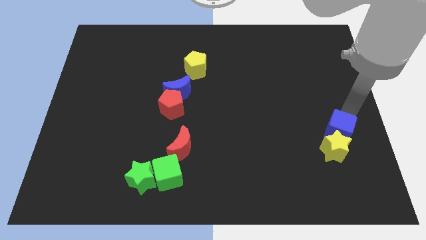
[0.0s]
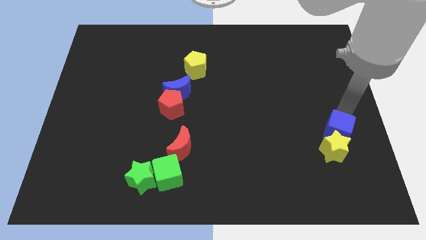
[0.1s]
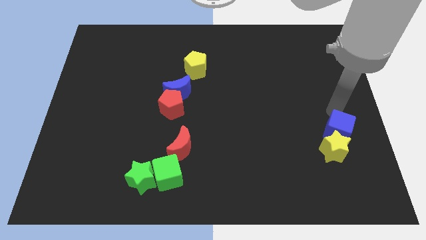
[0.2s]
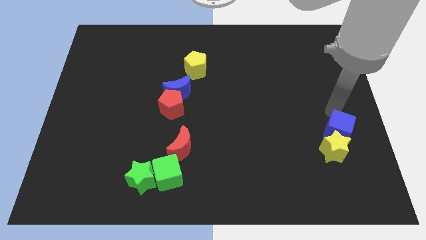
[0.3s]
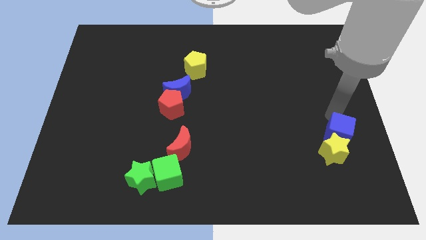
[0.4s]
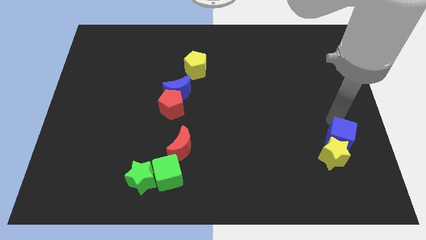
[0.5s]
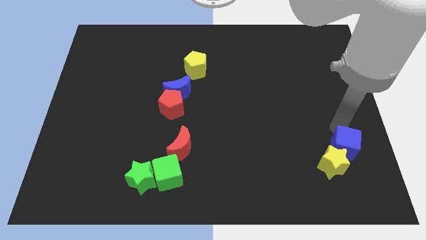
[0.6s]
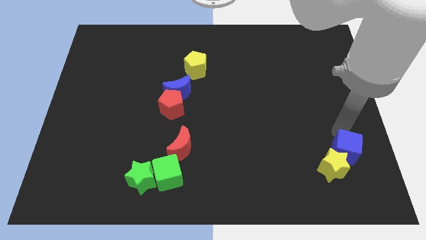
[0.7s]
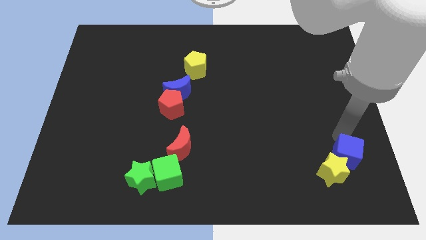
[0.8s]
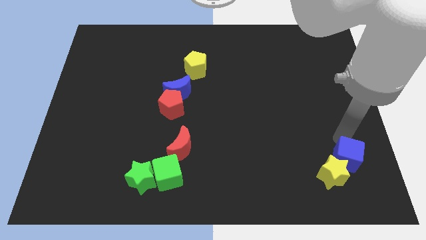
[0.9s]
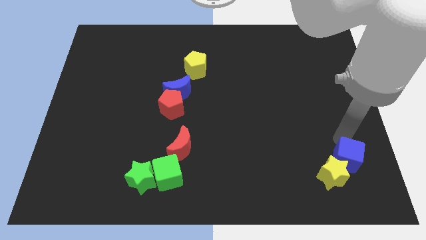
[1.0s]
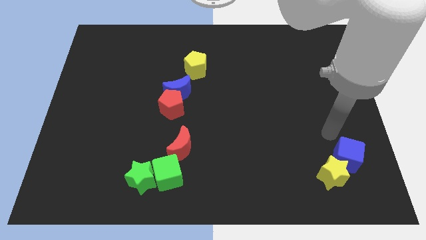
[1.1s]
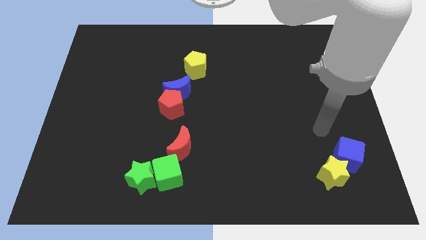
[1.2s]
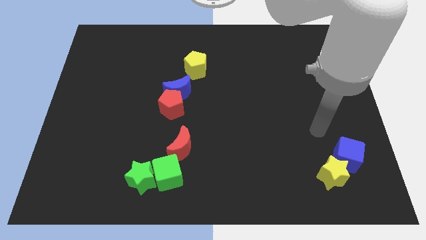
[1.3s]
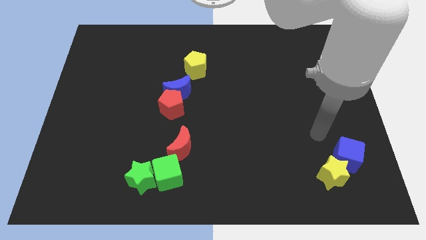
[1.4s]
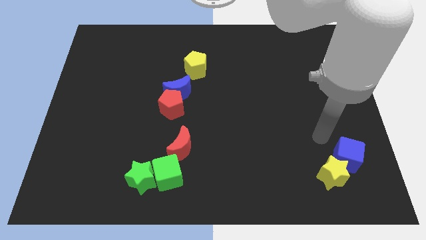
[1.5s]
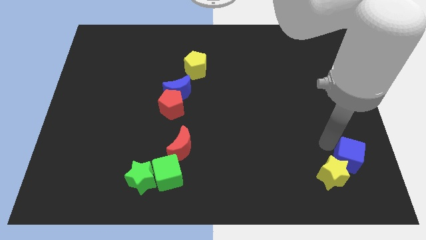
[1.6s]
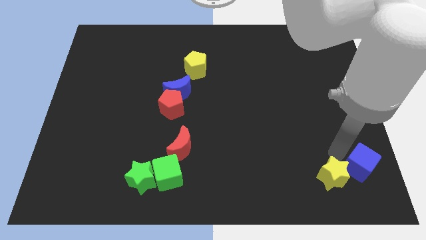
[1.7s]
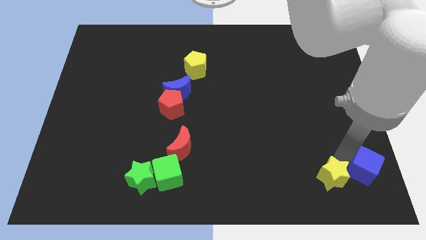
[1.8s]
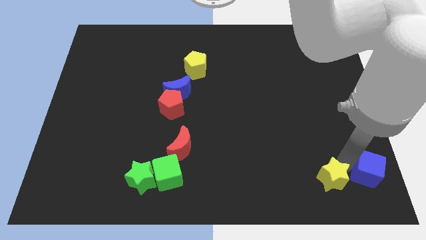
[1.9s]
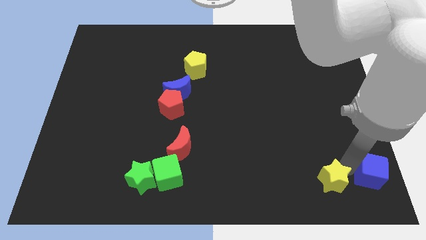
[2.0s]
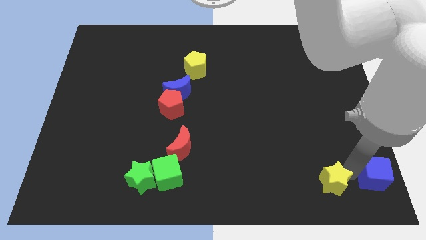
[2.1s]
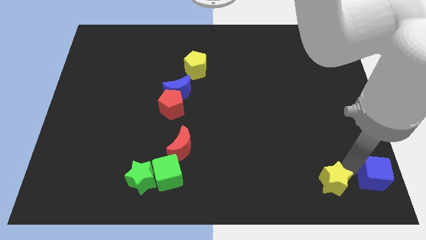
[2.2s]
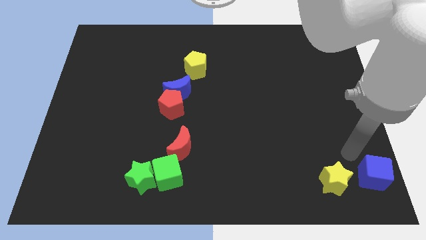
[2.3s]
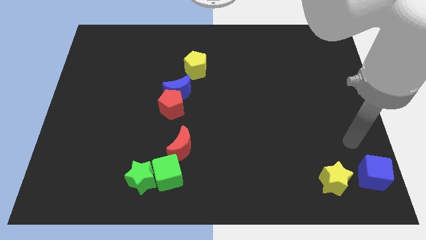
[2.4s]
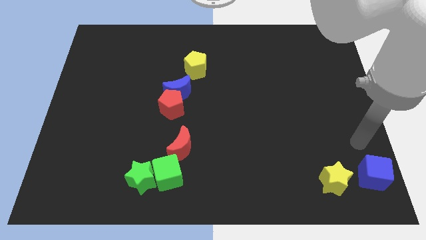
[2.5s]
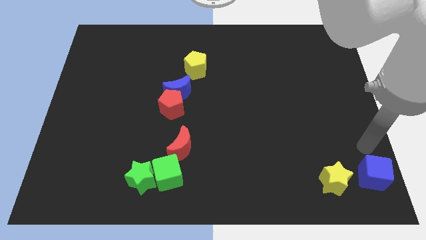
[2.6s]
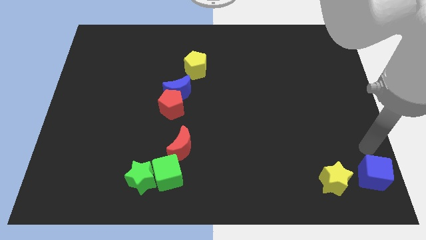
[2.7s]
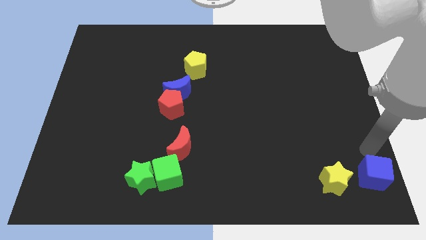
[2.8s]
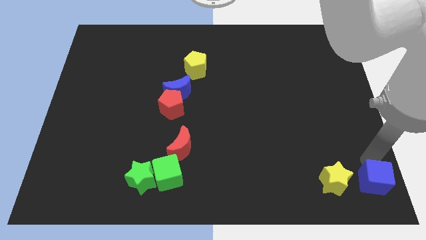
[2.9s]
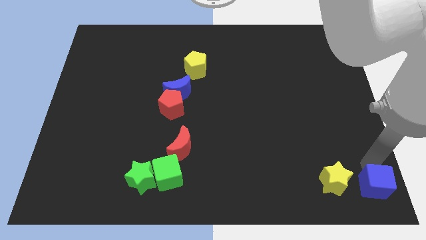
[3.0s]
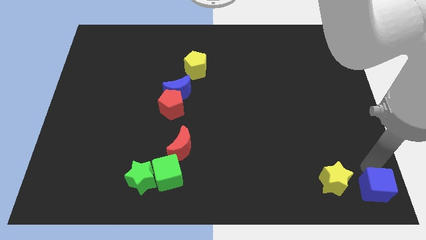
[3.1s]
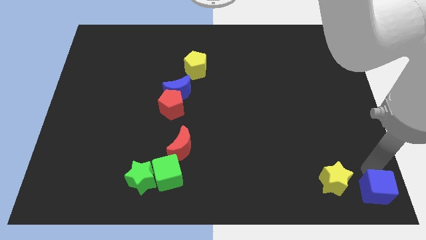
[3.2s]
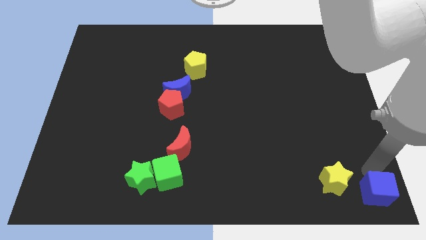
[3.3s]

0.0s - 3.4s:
move the blue cube and the yellow star towards the bottom of the board

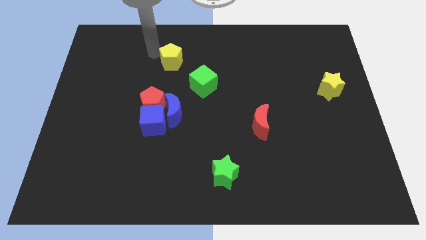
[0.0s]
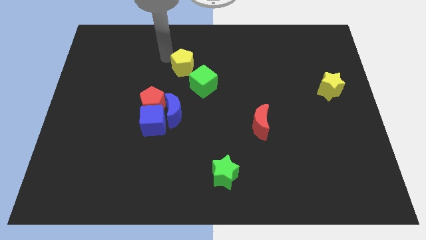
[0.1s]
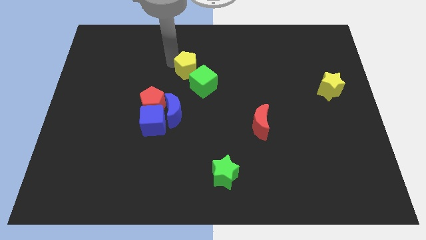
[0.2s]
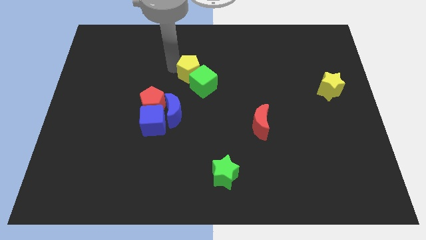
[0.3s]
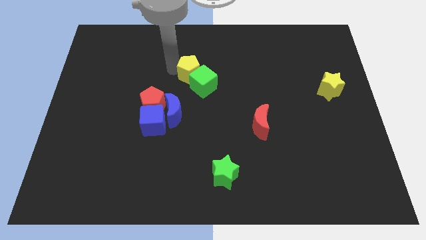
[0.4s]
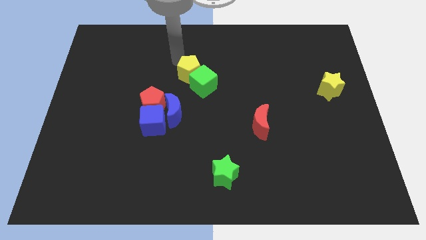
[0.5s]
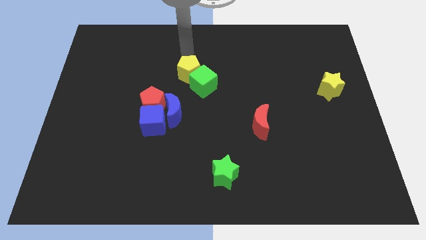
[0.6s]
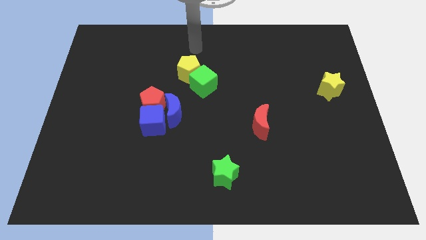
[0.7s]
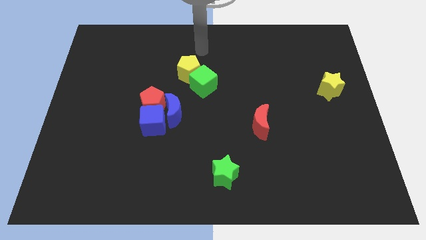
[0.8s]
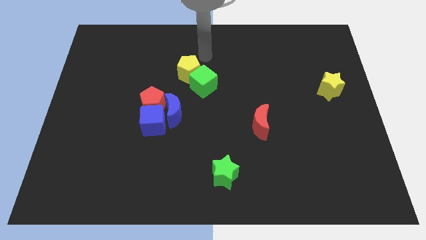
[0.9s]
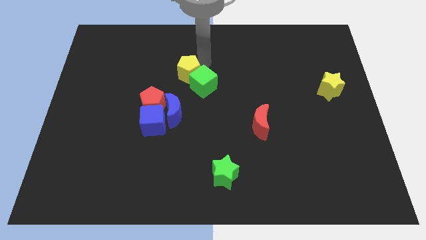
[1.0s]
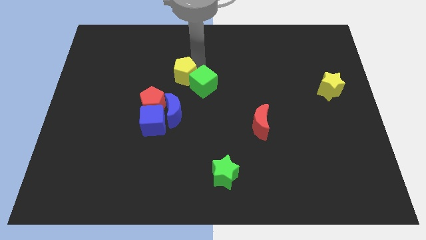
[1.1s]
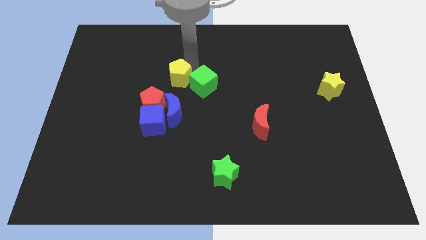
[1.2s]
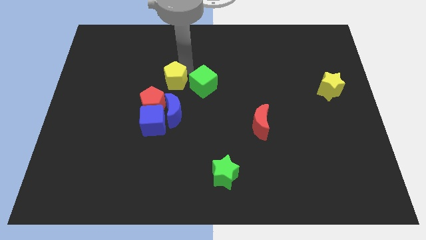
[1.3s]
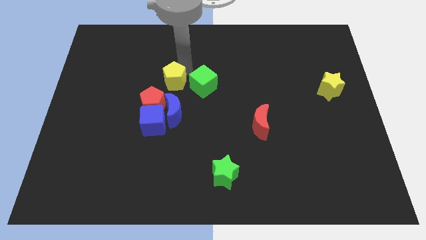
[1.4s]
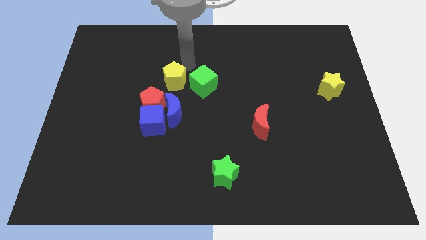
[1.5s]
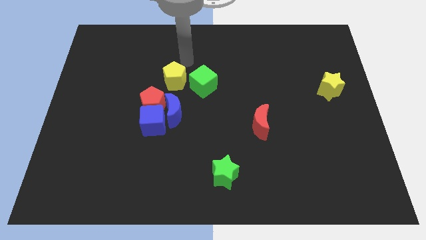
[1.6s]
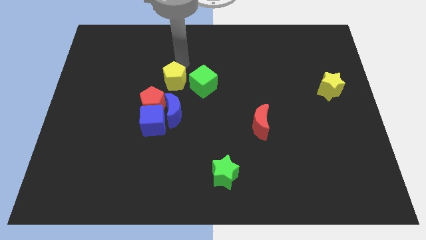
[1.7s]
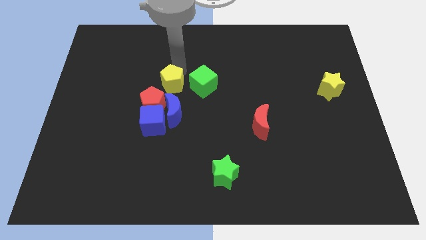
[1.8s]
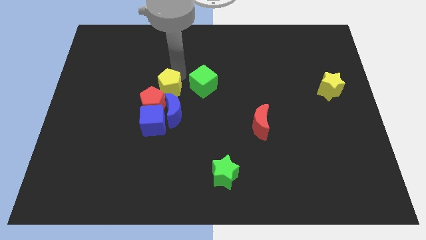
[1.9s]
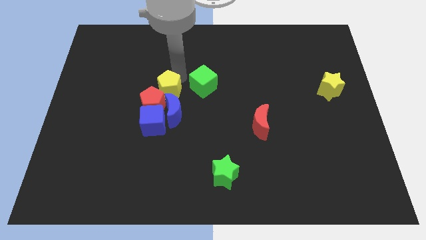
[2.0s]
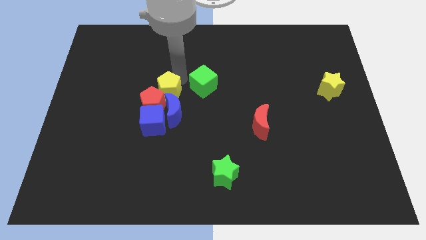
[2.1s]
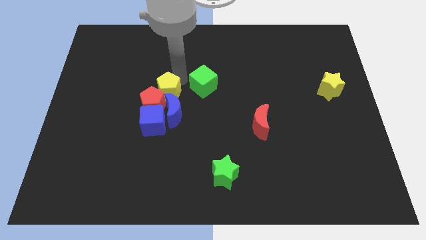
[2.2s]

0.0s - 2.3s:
place the yellow pentagon above the blue crescent

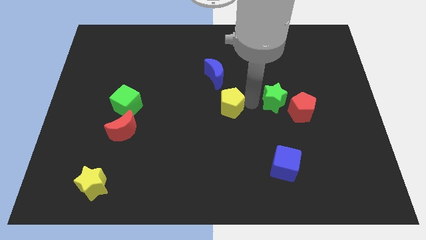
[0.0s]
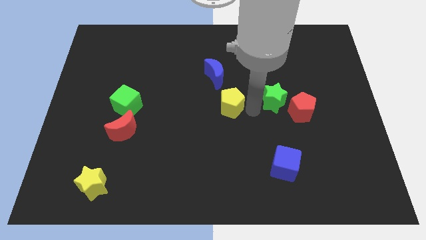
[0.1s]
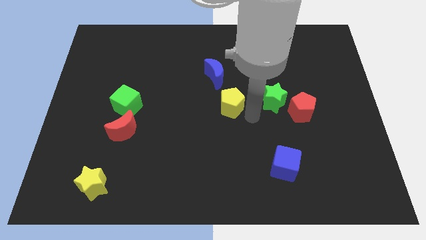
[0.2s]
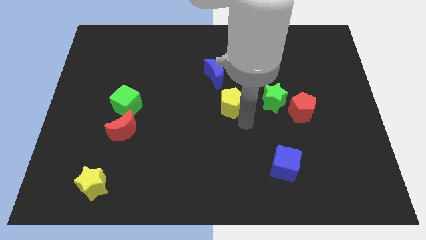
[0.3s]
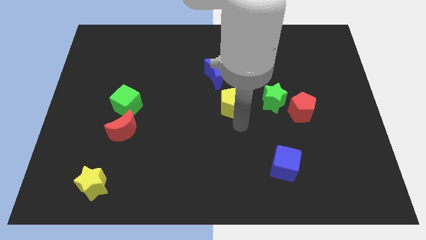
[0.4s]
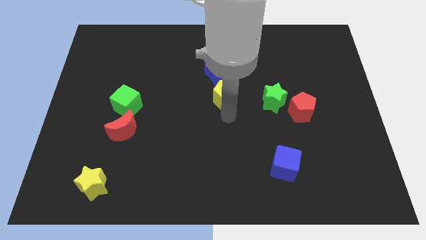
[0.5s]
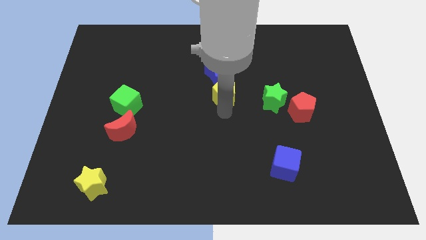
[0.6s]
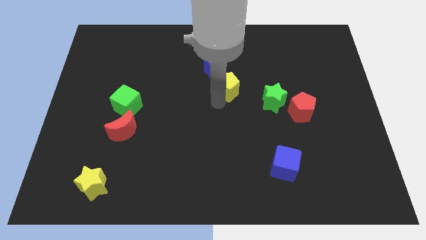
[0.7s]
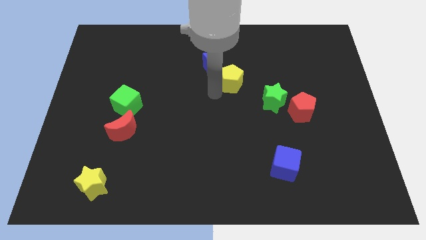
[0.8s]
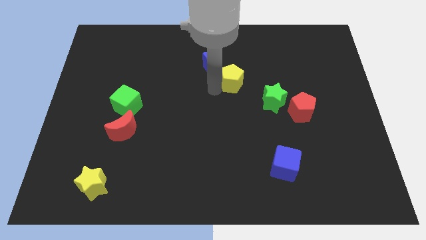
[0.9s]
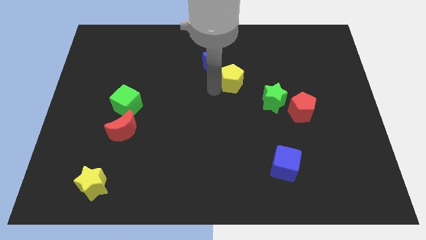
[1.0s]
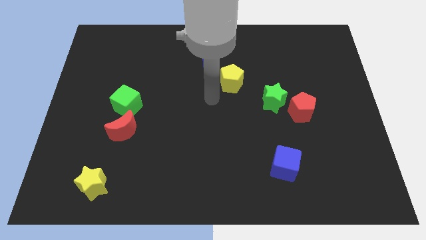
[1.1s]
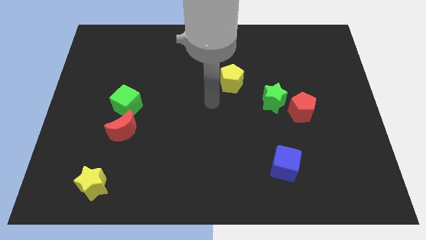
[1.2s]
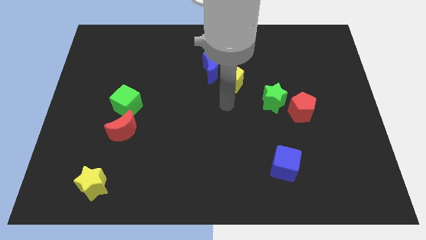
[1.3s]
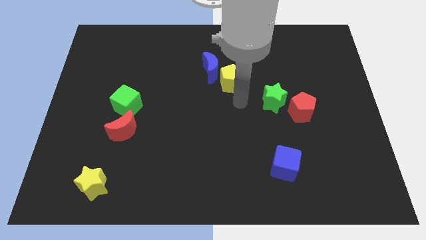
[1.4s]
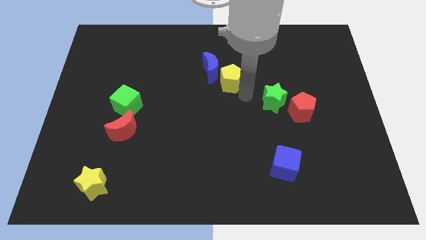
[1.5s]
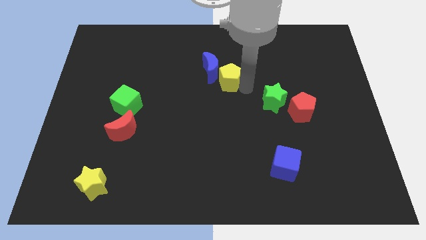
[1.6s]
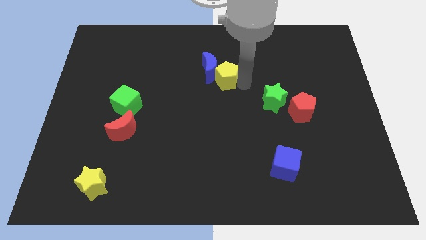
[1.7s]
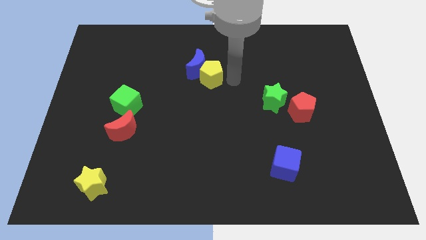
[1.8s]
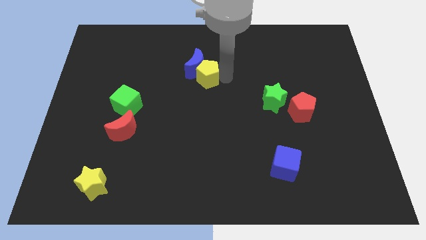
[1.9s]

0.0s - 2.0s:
push the yellow pentagon into the blue moon

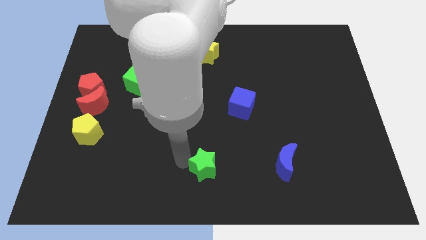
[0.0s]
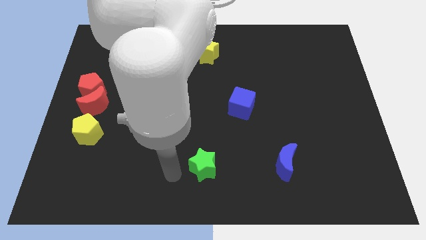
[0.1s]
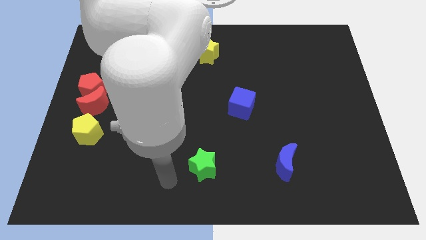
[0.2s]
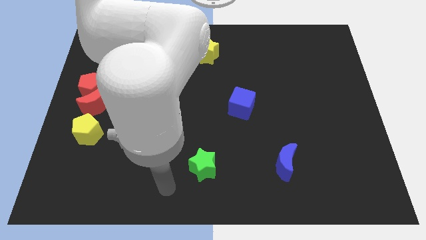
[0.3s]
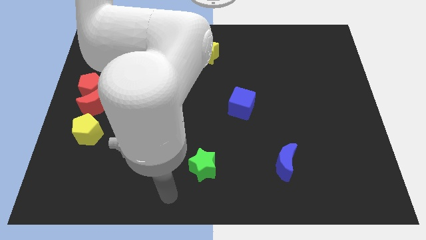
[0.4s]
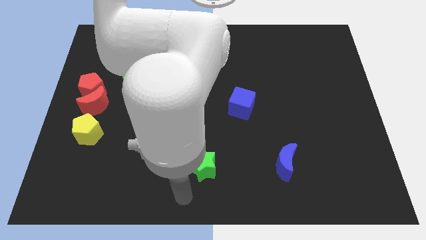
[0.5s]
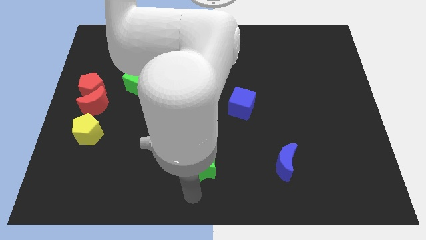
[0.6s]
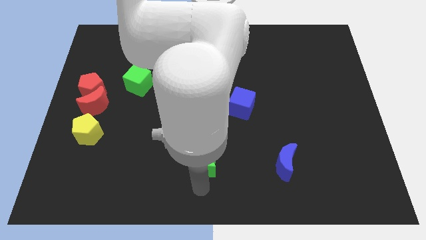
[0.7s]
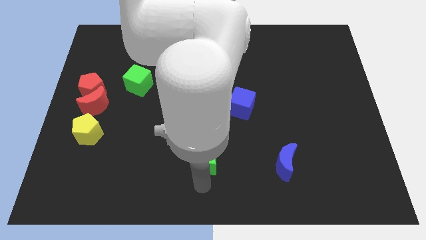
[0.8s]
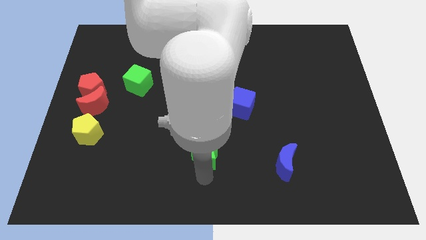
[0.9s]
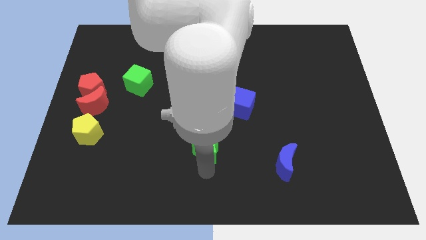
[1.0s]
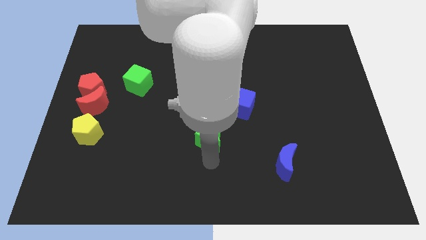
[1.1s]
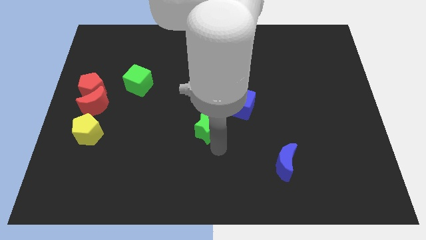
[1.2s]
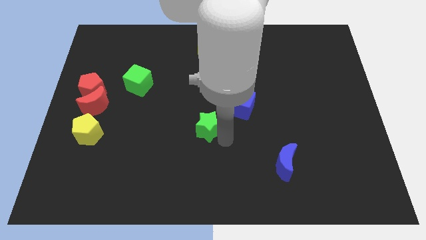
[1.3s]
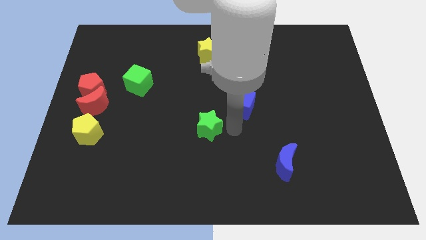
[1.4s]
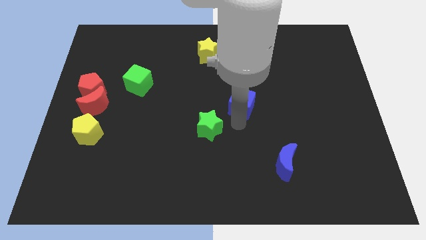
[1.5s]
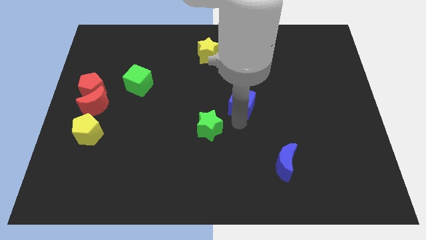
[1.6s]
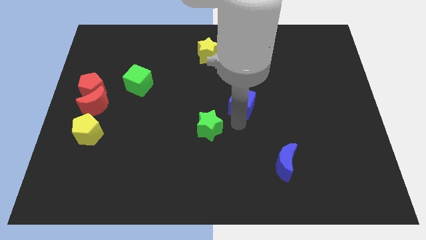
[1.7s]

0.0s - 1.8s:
move the green star vertically below the yellow star
